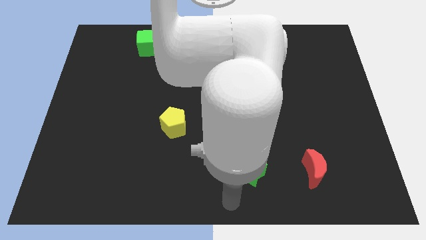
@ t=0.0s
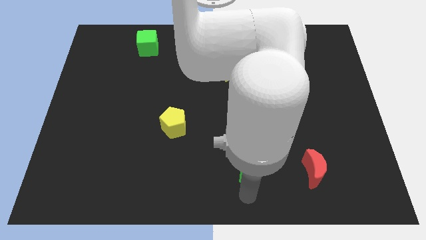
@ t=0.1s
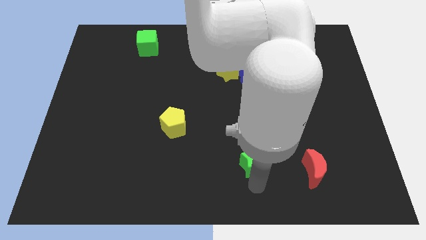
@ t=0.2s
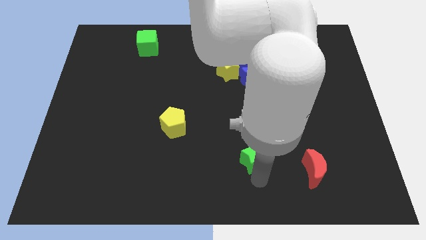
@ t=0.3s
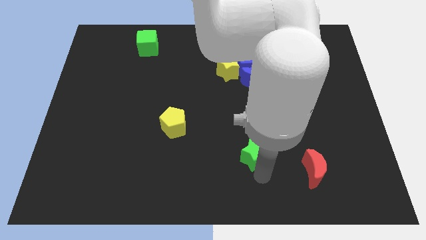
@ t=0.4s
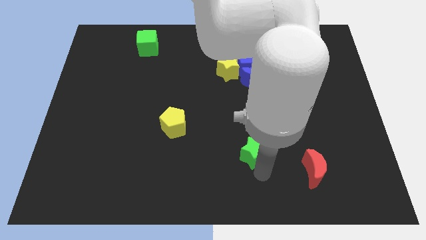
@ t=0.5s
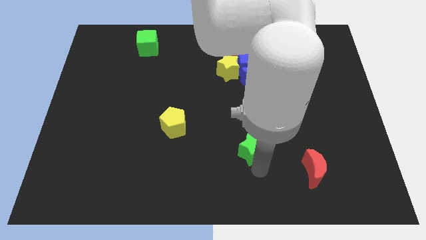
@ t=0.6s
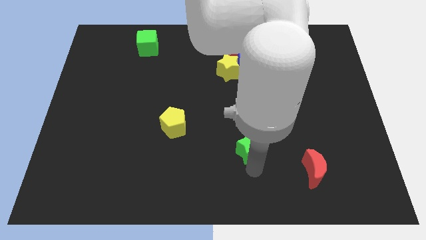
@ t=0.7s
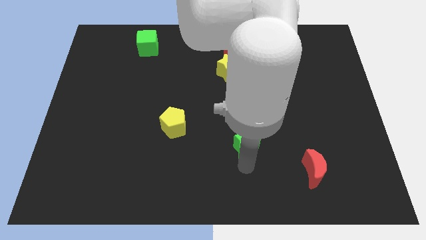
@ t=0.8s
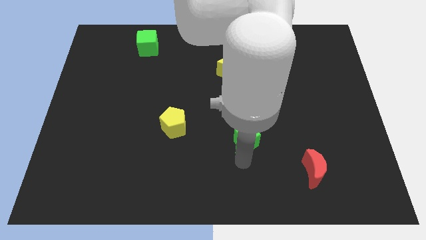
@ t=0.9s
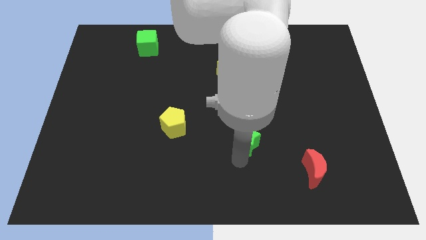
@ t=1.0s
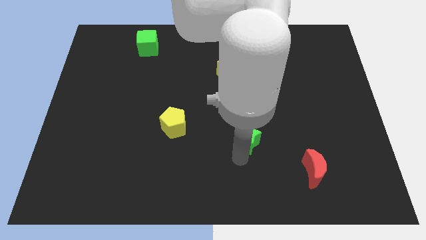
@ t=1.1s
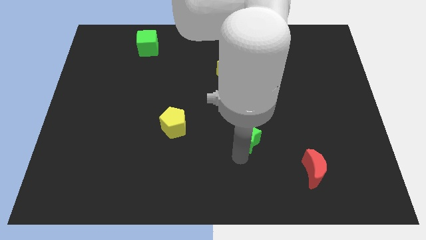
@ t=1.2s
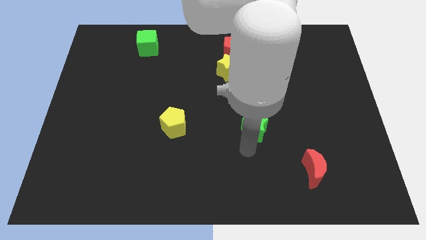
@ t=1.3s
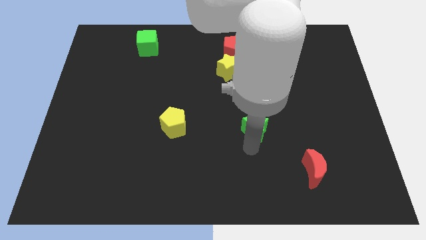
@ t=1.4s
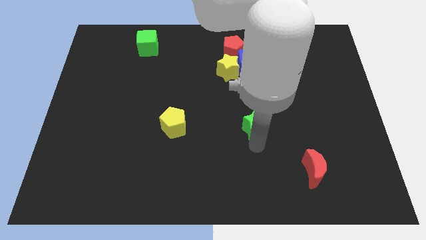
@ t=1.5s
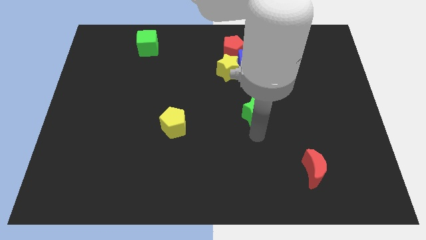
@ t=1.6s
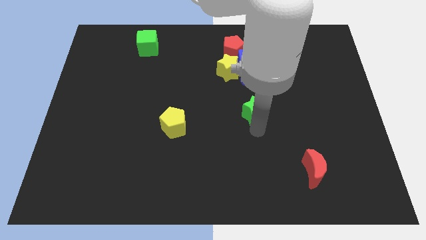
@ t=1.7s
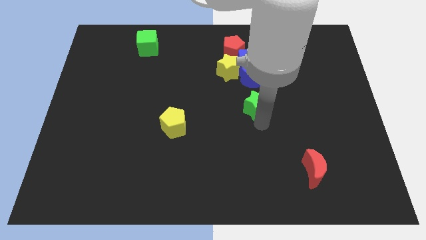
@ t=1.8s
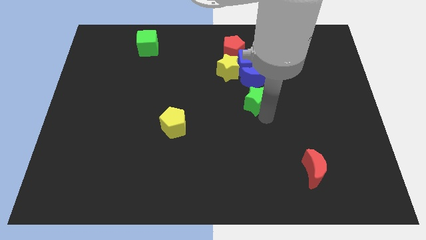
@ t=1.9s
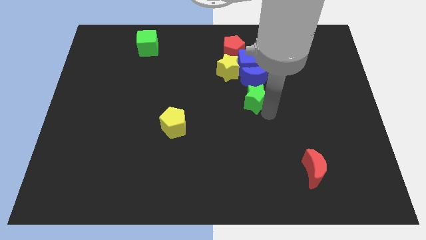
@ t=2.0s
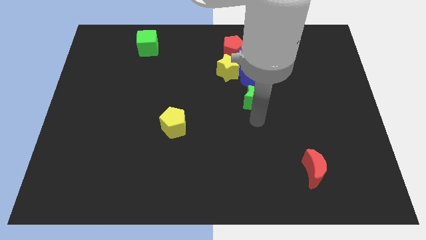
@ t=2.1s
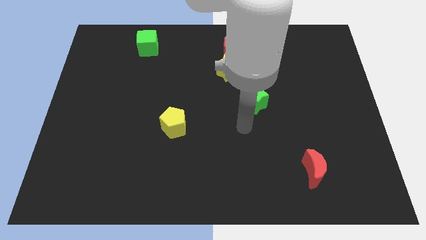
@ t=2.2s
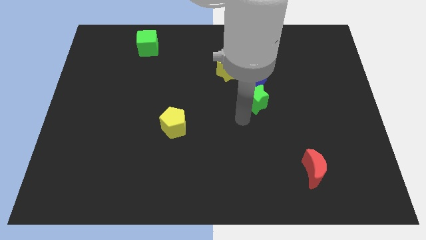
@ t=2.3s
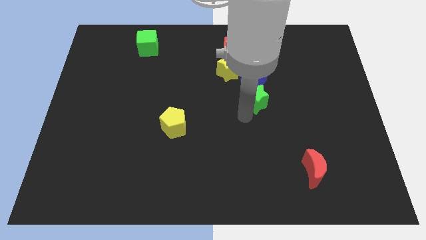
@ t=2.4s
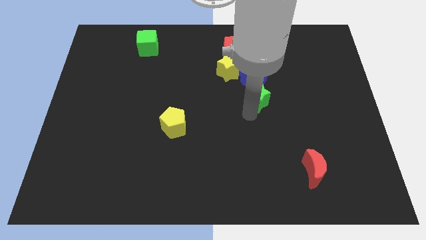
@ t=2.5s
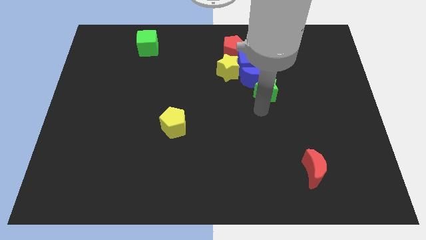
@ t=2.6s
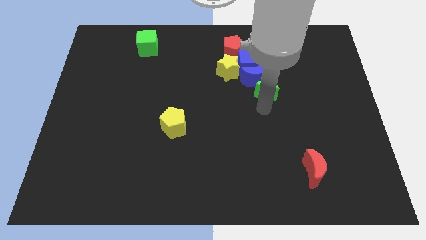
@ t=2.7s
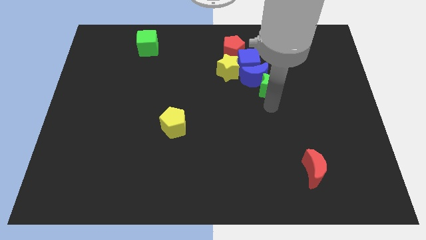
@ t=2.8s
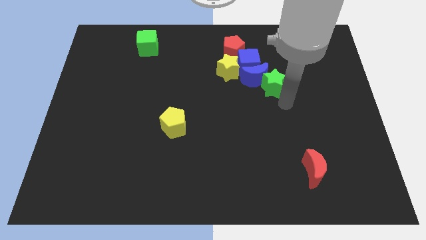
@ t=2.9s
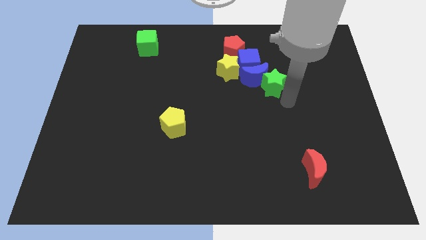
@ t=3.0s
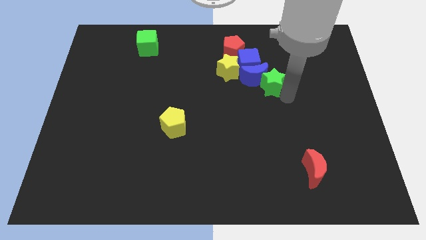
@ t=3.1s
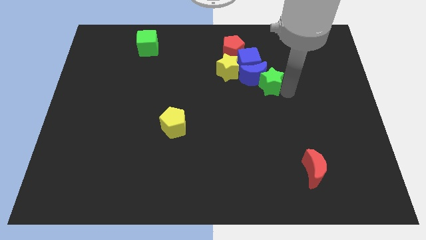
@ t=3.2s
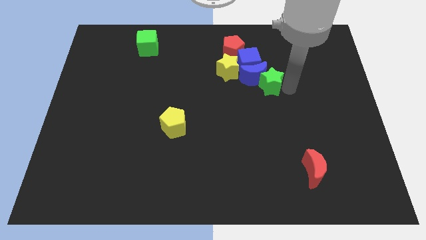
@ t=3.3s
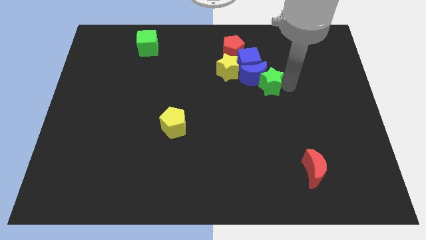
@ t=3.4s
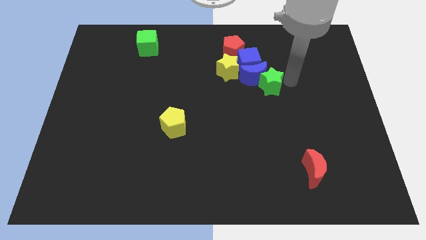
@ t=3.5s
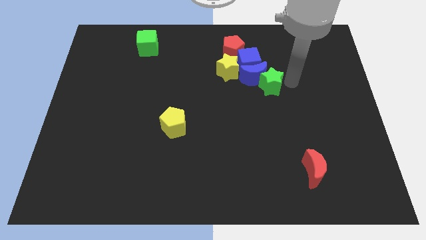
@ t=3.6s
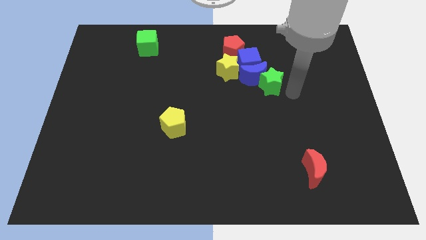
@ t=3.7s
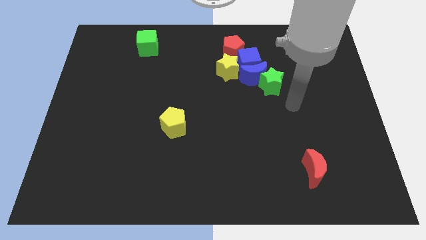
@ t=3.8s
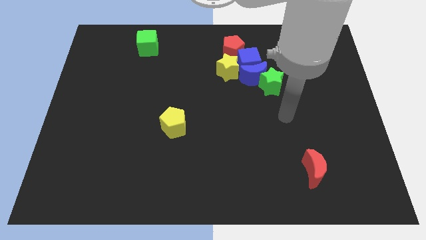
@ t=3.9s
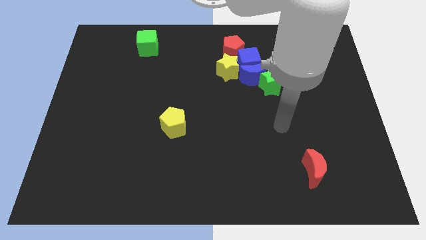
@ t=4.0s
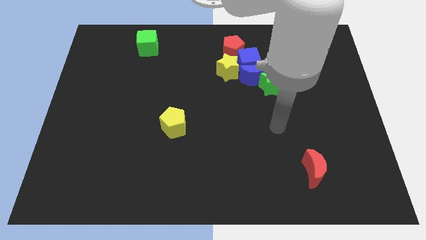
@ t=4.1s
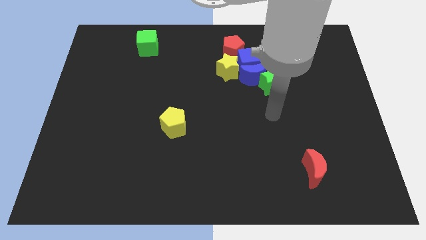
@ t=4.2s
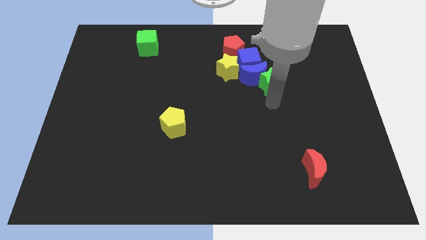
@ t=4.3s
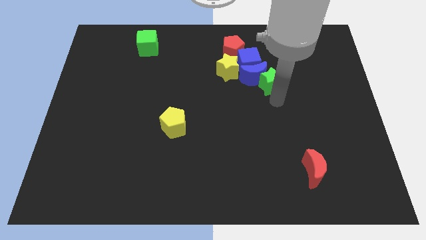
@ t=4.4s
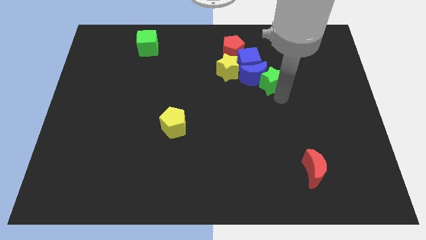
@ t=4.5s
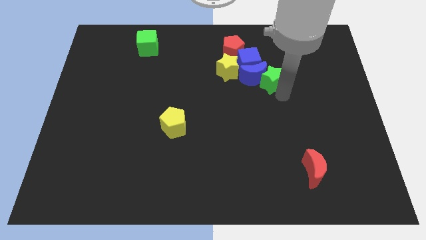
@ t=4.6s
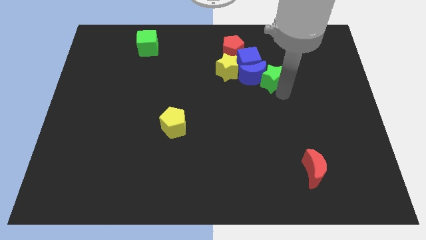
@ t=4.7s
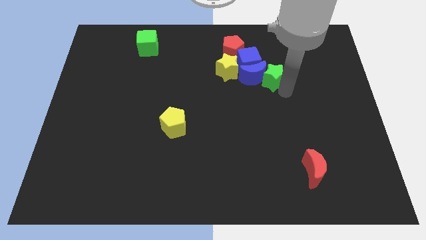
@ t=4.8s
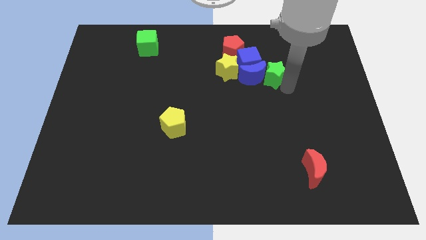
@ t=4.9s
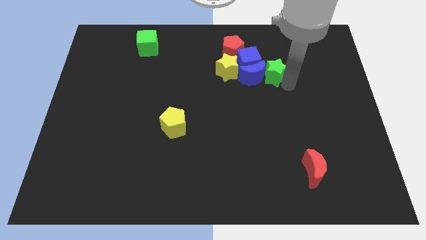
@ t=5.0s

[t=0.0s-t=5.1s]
slide green star to the right of blue moon

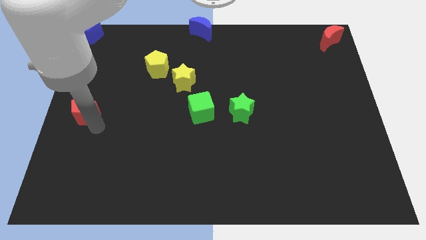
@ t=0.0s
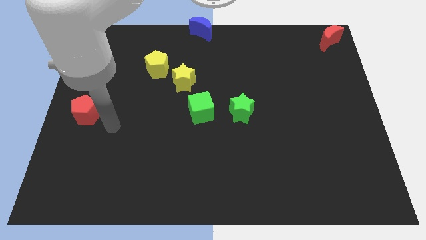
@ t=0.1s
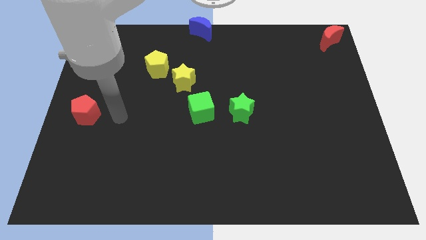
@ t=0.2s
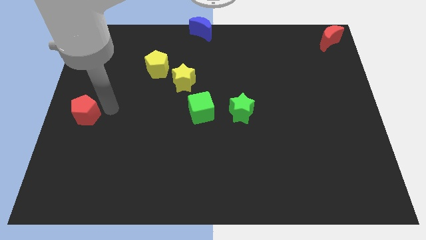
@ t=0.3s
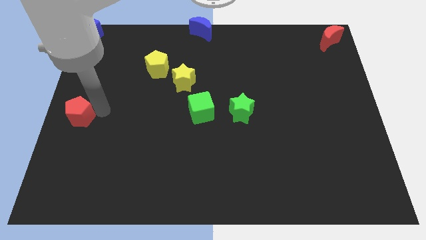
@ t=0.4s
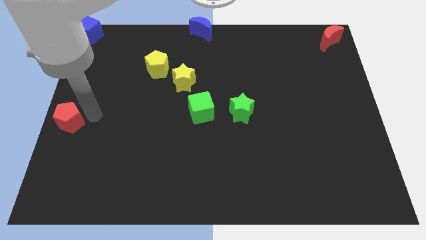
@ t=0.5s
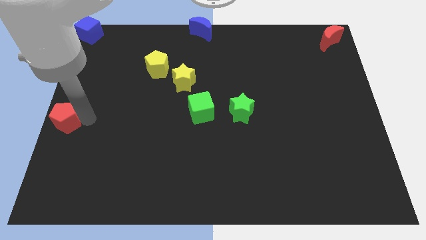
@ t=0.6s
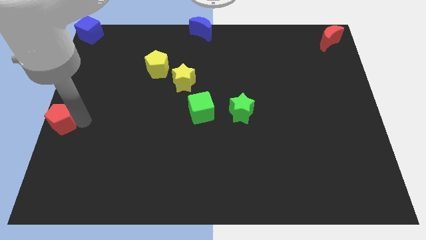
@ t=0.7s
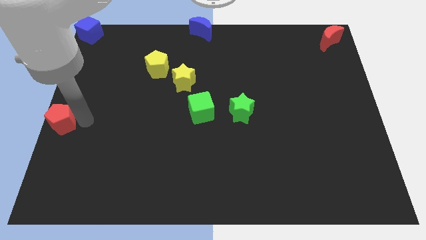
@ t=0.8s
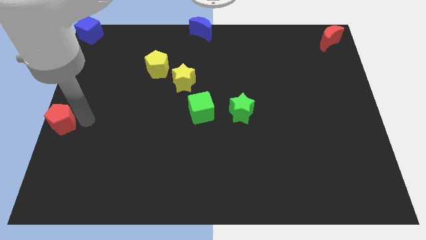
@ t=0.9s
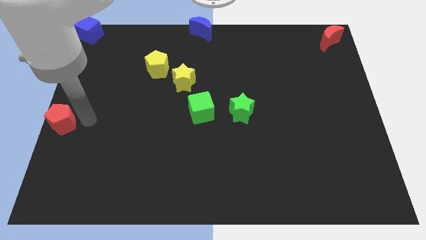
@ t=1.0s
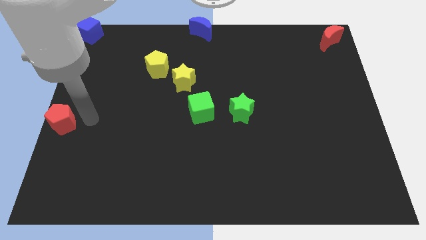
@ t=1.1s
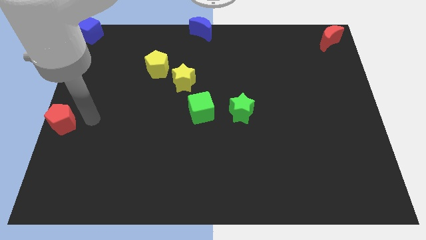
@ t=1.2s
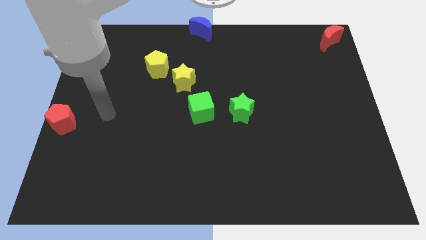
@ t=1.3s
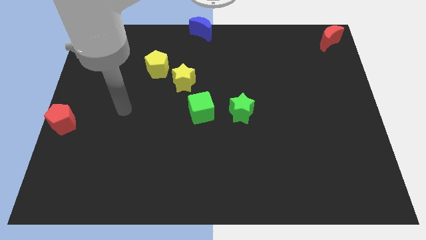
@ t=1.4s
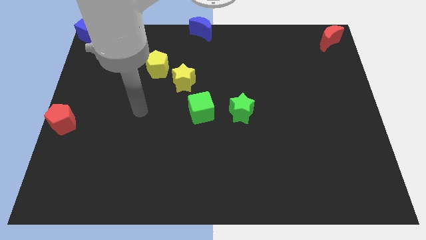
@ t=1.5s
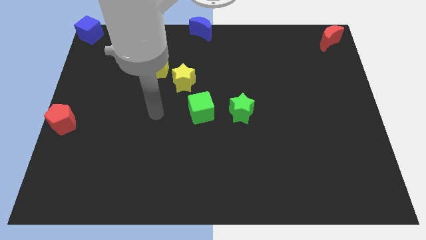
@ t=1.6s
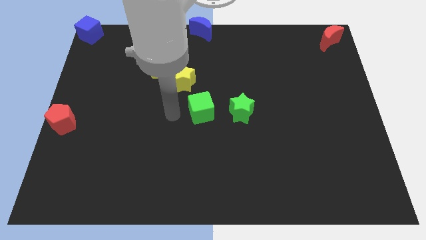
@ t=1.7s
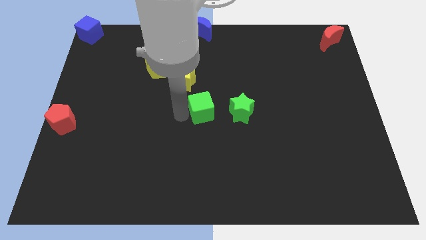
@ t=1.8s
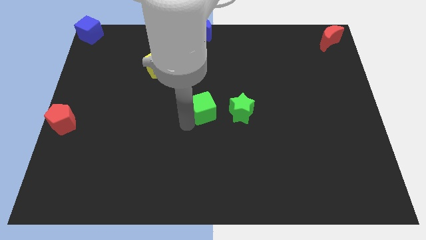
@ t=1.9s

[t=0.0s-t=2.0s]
place the red pentagon in the middle left

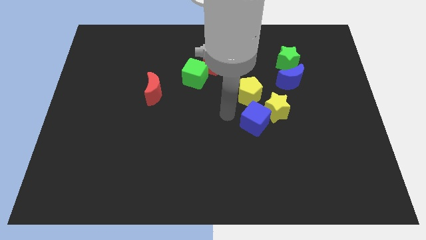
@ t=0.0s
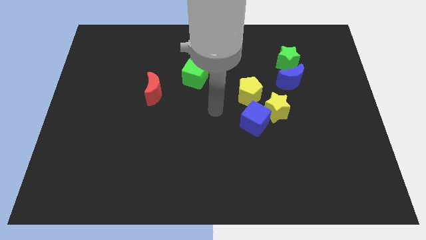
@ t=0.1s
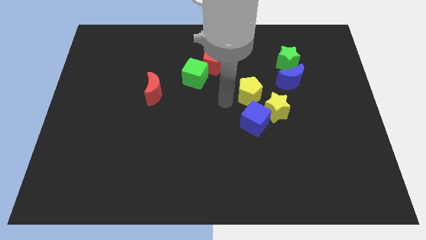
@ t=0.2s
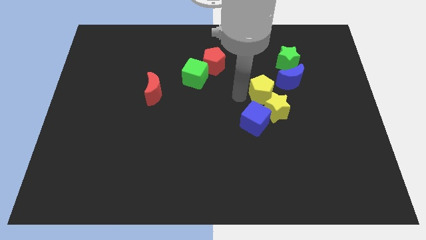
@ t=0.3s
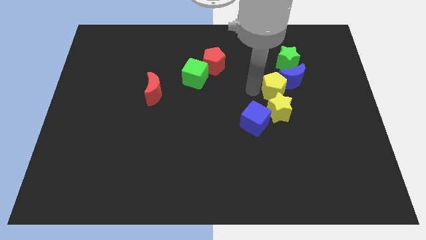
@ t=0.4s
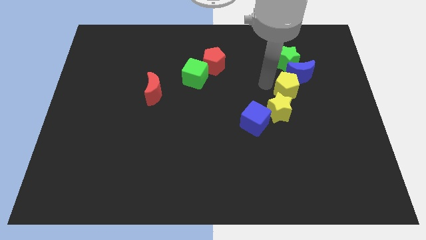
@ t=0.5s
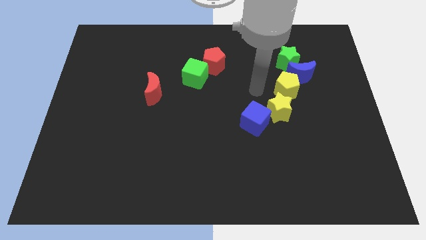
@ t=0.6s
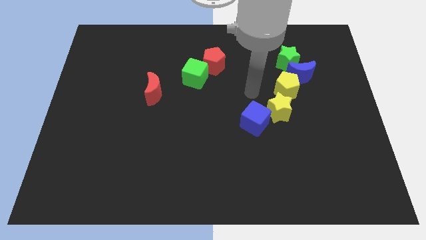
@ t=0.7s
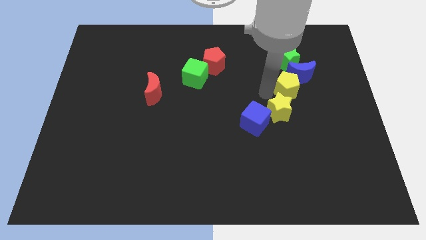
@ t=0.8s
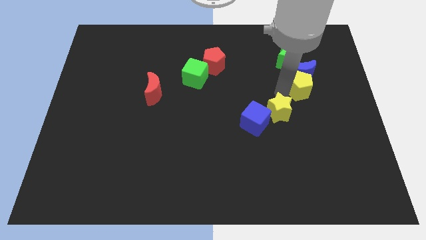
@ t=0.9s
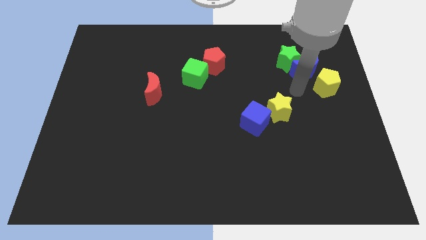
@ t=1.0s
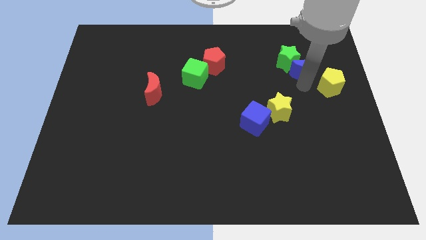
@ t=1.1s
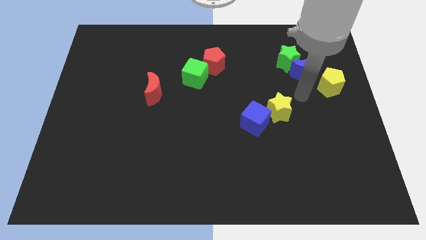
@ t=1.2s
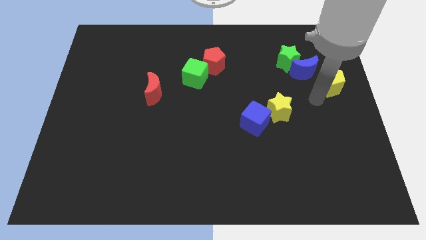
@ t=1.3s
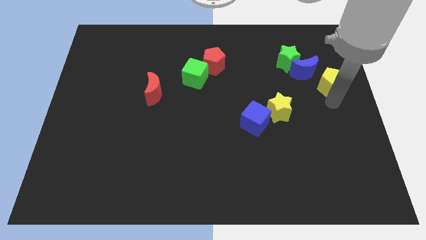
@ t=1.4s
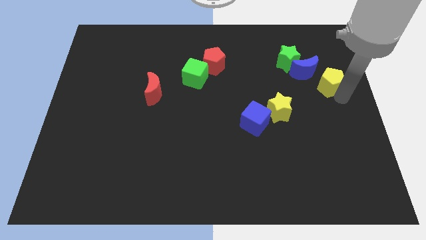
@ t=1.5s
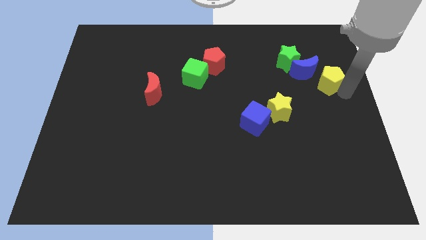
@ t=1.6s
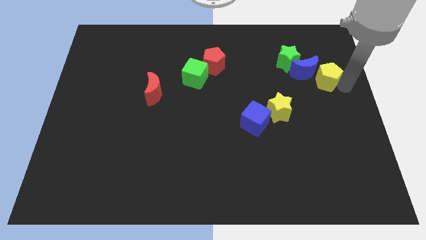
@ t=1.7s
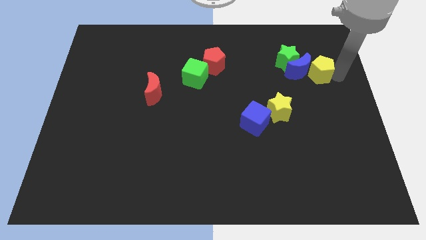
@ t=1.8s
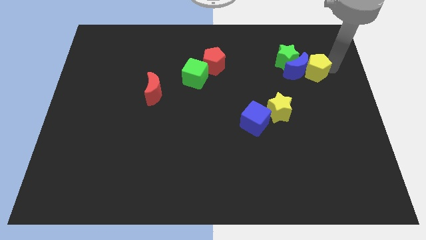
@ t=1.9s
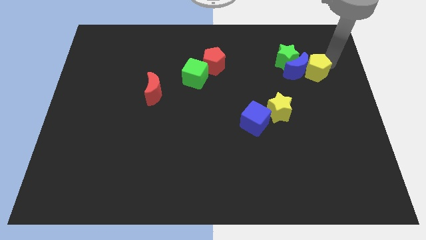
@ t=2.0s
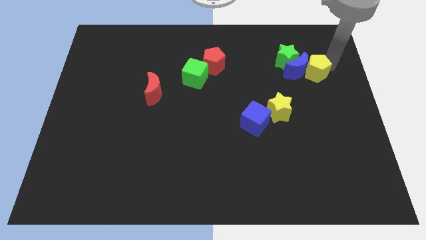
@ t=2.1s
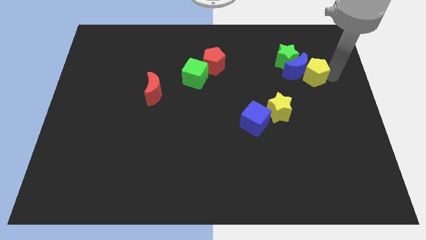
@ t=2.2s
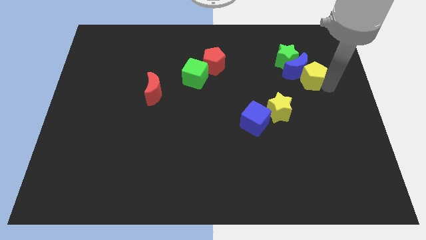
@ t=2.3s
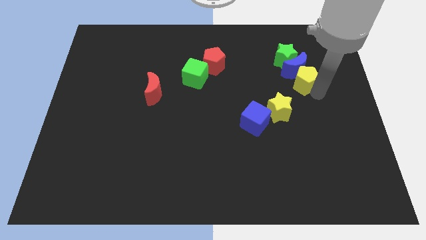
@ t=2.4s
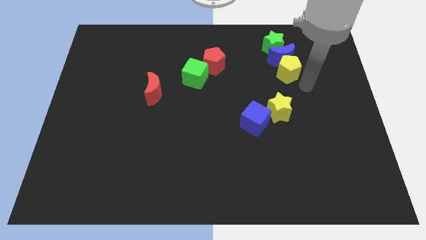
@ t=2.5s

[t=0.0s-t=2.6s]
push the yellow pentagon bottom to the blue crescent
